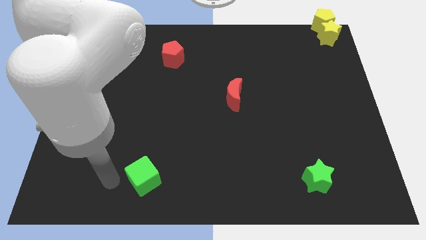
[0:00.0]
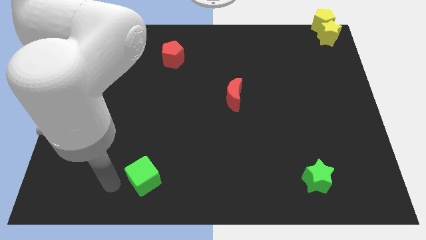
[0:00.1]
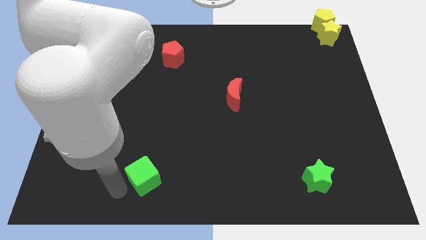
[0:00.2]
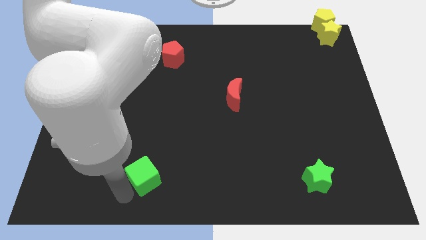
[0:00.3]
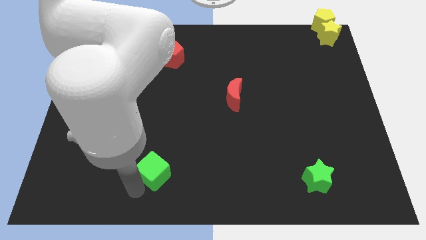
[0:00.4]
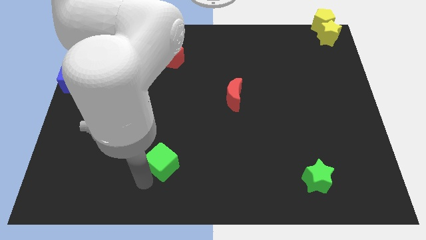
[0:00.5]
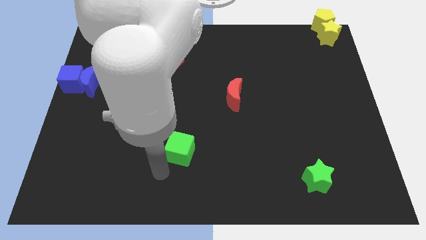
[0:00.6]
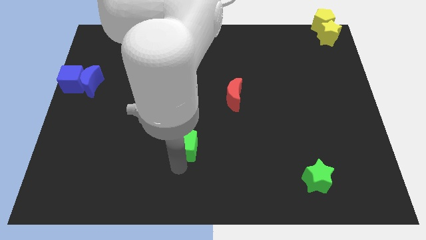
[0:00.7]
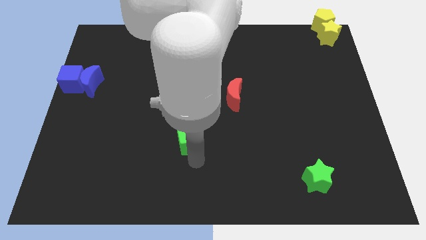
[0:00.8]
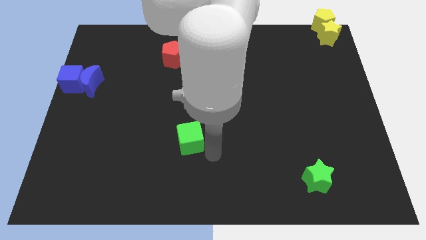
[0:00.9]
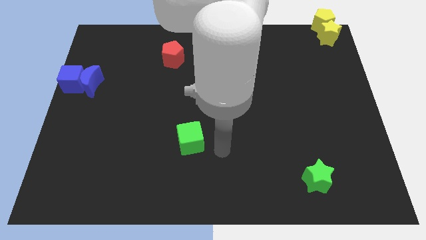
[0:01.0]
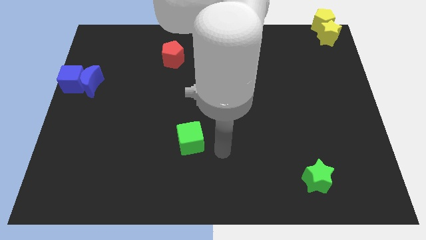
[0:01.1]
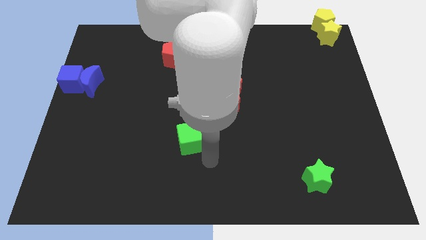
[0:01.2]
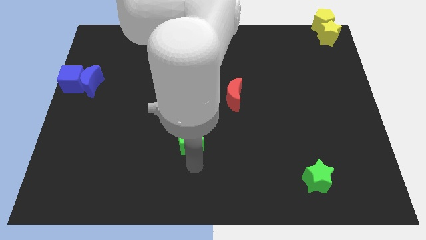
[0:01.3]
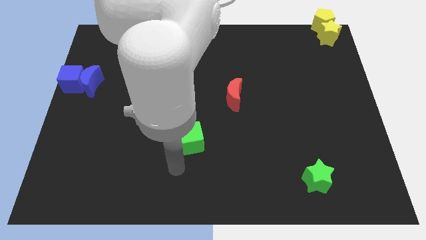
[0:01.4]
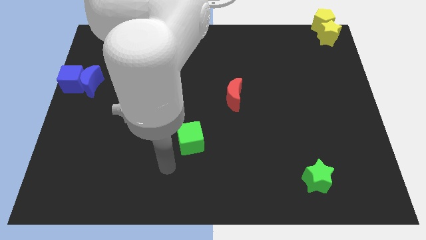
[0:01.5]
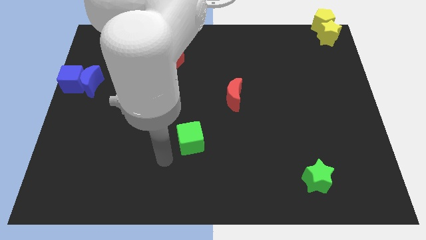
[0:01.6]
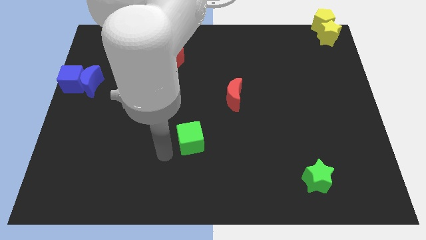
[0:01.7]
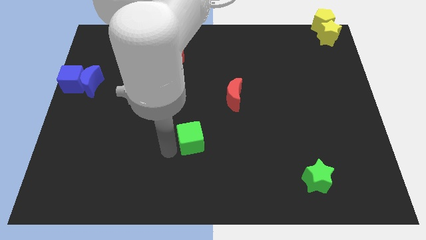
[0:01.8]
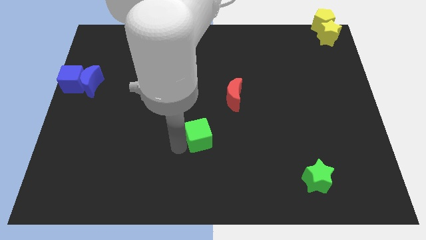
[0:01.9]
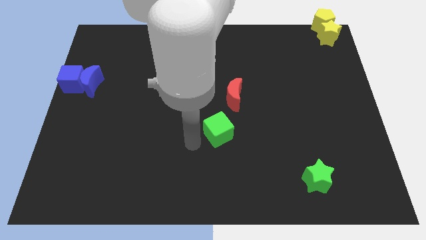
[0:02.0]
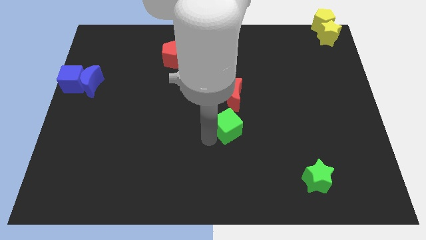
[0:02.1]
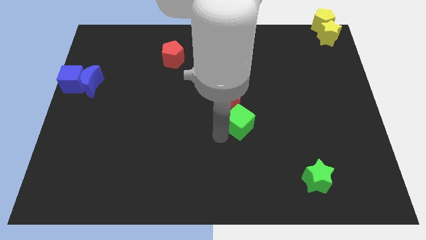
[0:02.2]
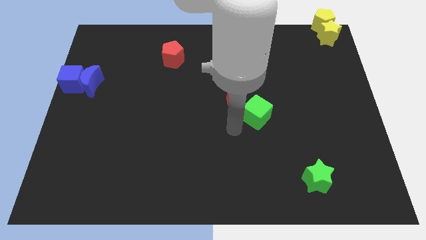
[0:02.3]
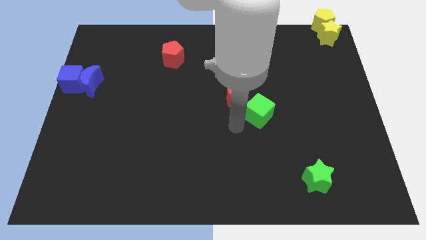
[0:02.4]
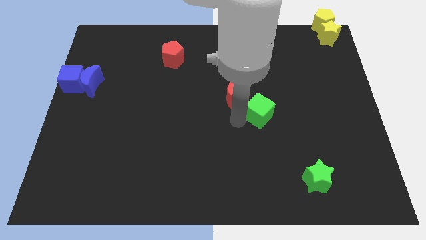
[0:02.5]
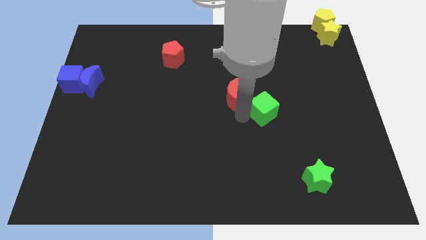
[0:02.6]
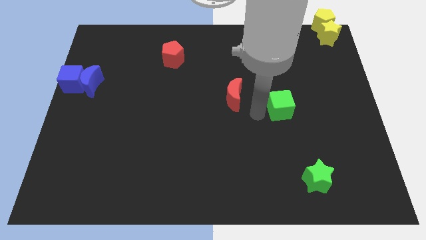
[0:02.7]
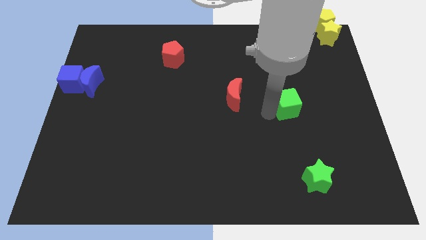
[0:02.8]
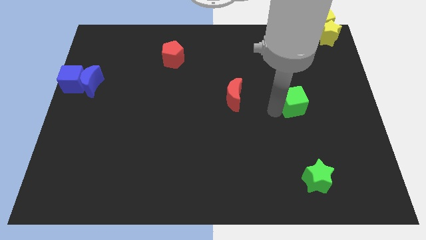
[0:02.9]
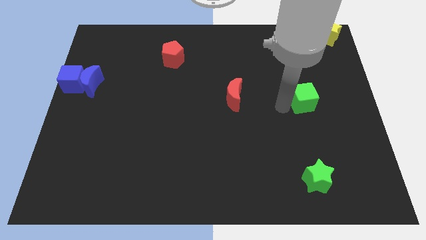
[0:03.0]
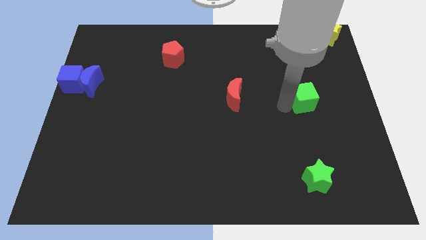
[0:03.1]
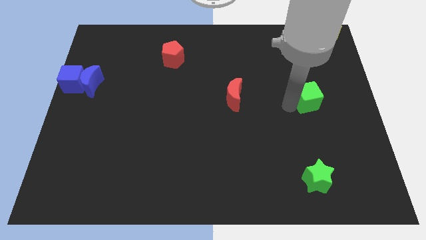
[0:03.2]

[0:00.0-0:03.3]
place the green cube to the right of the red moon

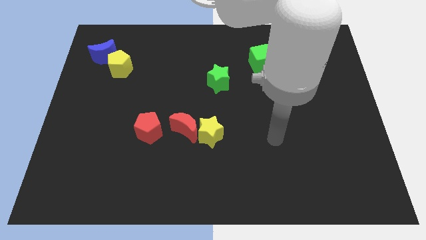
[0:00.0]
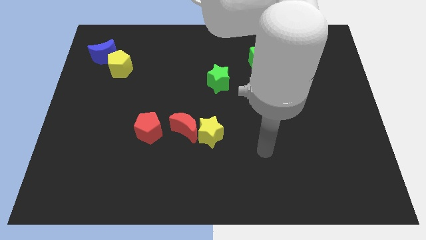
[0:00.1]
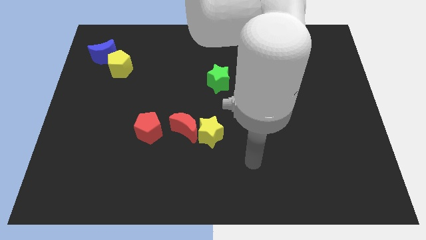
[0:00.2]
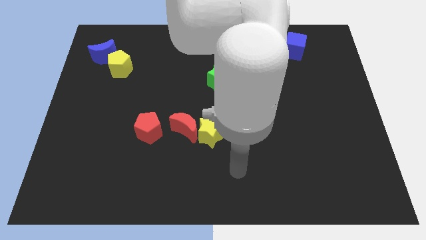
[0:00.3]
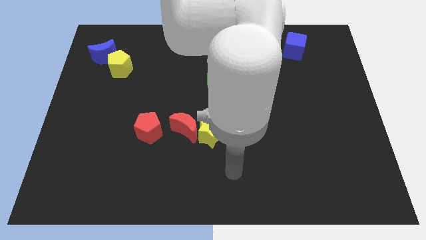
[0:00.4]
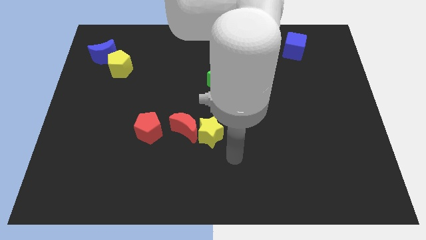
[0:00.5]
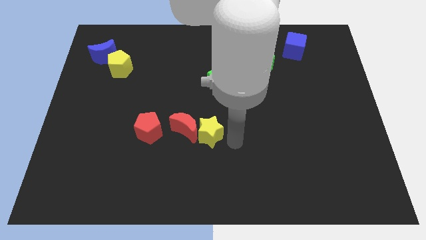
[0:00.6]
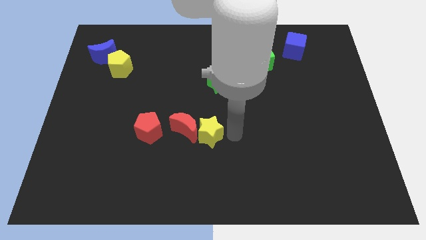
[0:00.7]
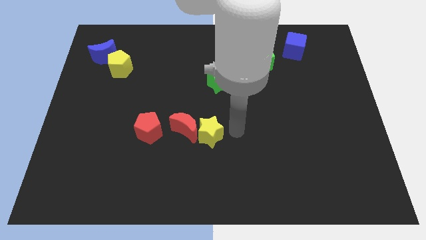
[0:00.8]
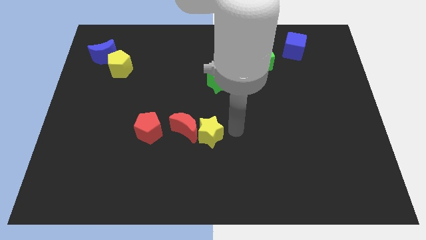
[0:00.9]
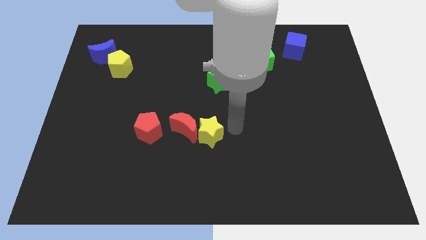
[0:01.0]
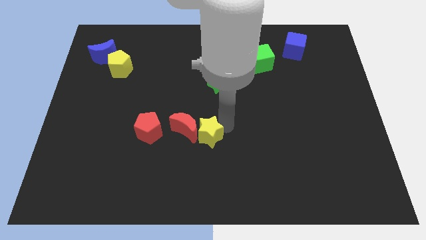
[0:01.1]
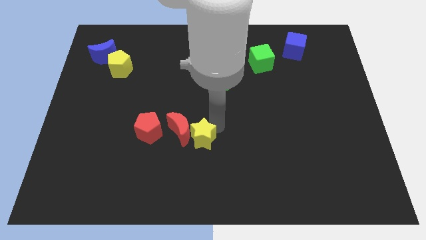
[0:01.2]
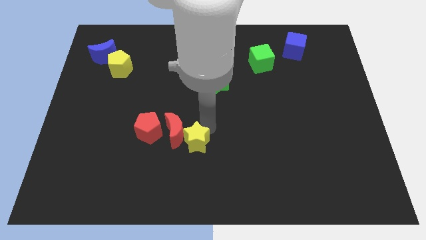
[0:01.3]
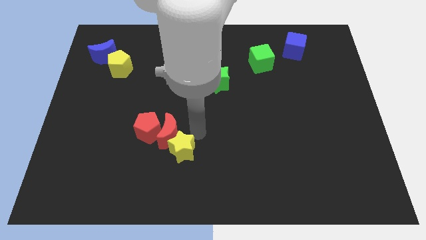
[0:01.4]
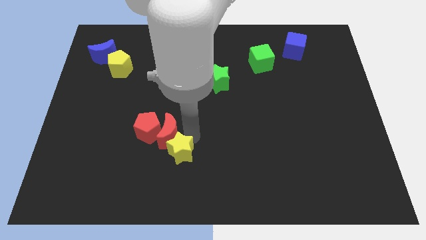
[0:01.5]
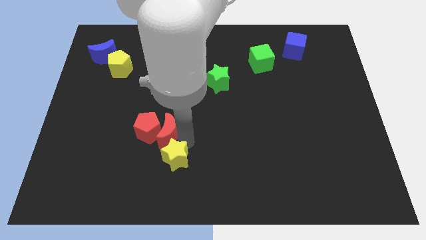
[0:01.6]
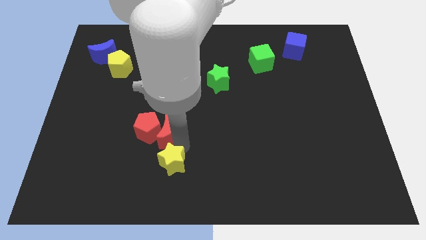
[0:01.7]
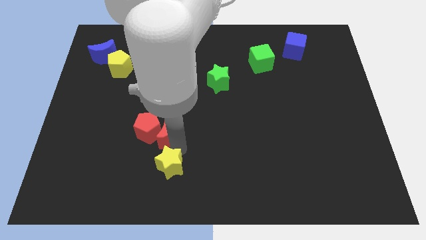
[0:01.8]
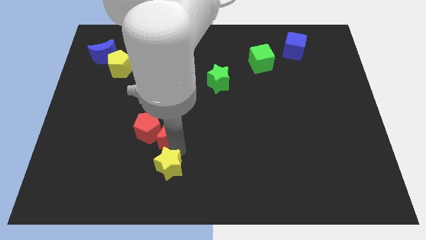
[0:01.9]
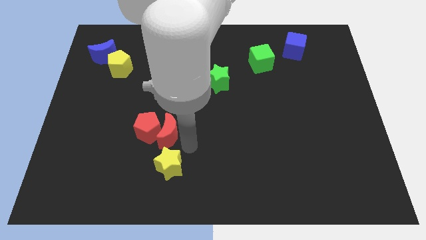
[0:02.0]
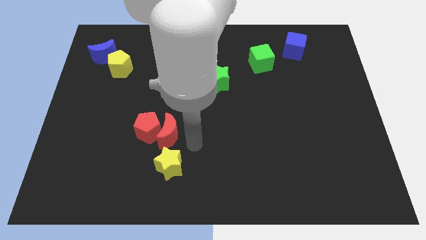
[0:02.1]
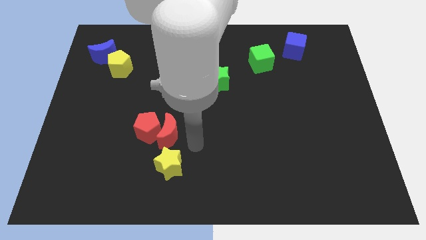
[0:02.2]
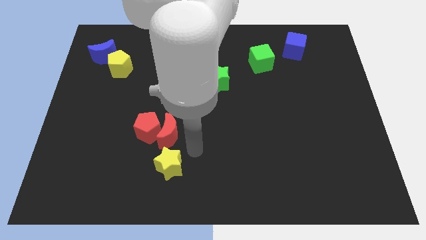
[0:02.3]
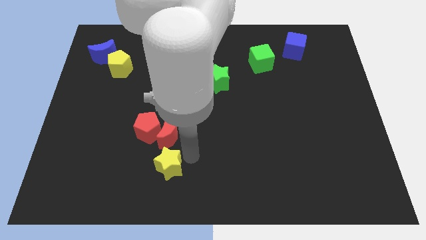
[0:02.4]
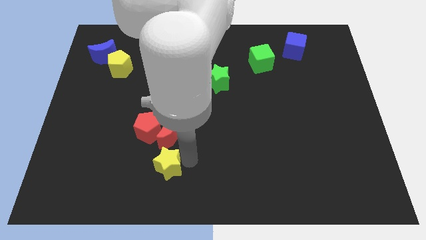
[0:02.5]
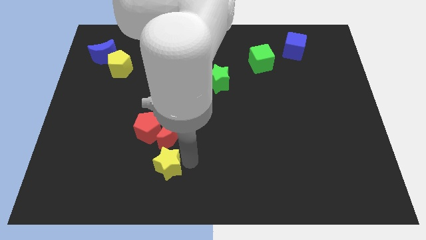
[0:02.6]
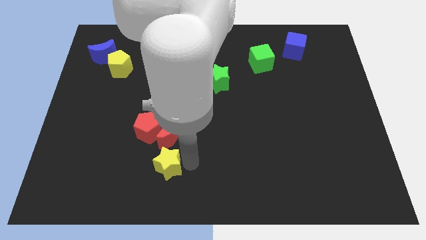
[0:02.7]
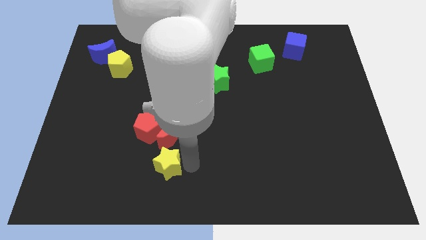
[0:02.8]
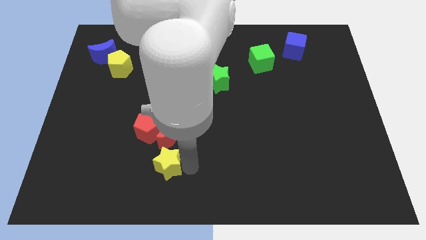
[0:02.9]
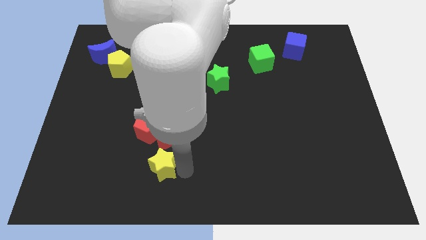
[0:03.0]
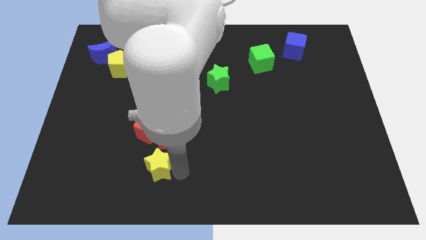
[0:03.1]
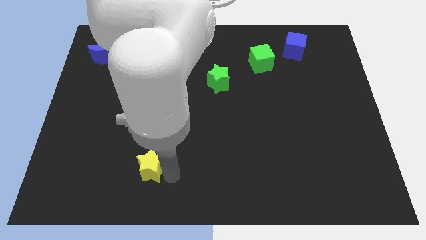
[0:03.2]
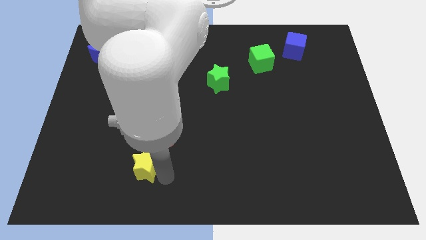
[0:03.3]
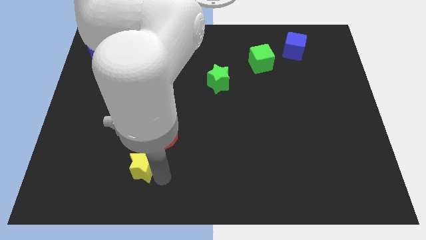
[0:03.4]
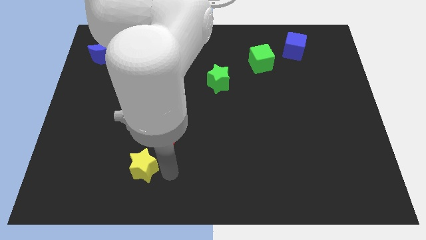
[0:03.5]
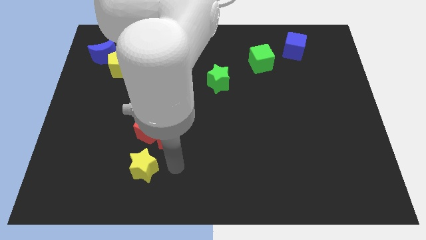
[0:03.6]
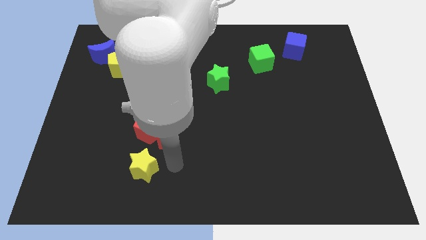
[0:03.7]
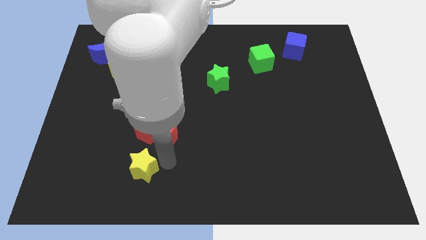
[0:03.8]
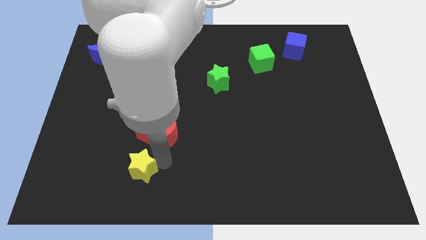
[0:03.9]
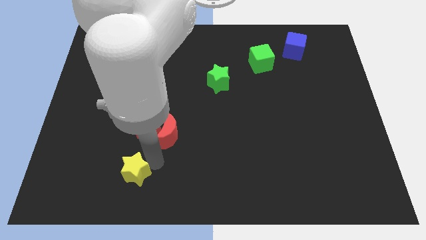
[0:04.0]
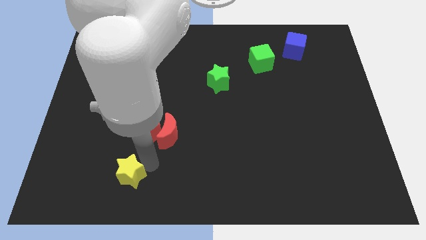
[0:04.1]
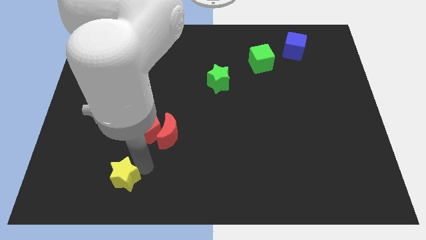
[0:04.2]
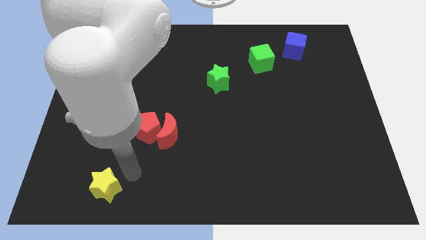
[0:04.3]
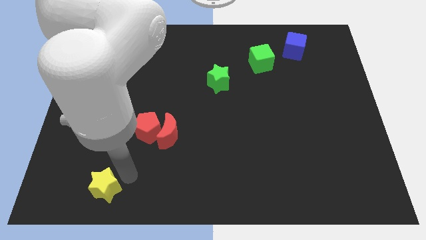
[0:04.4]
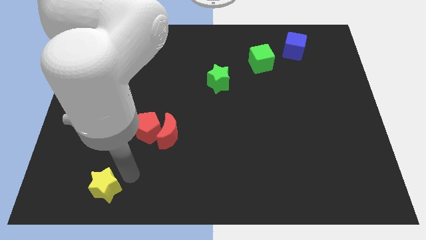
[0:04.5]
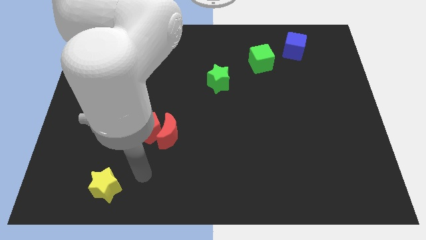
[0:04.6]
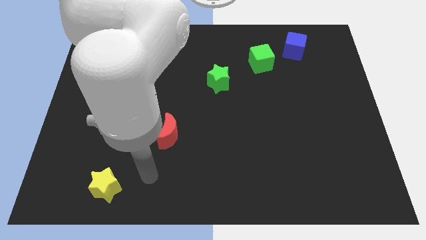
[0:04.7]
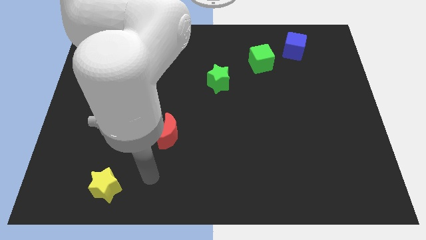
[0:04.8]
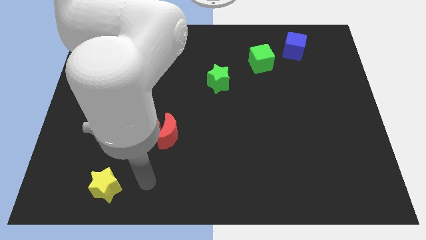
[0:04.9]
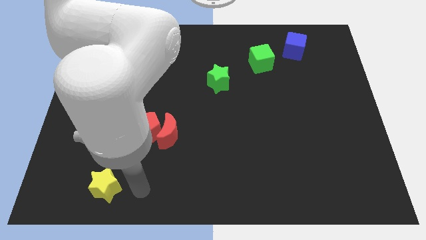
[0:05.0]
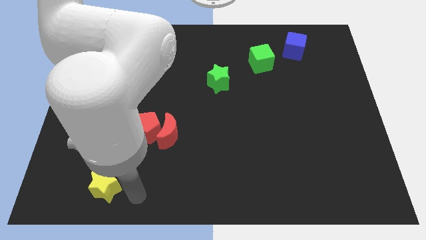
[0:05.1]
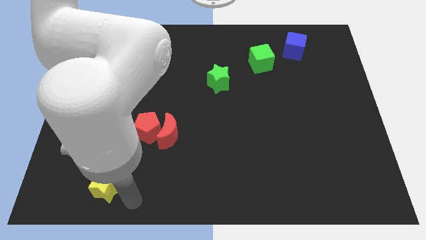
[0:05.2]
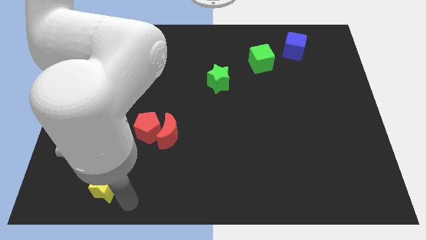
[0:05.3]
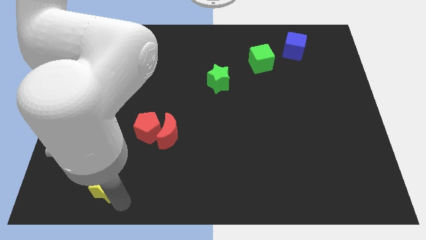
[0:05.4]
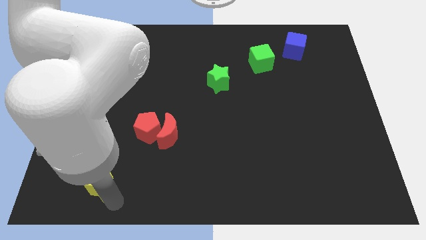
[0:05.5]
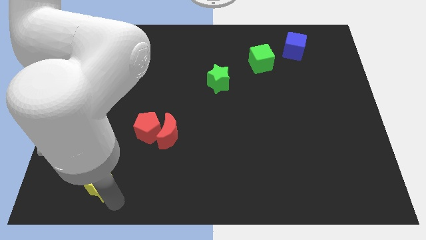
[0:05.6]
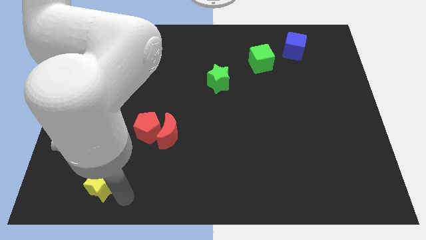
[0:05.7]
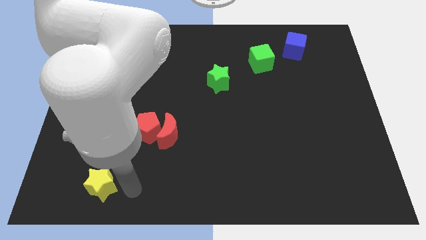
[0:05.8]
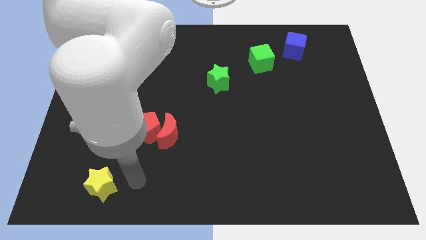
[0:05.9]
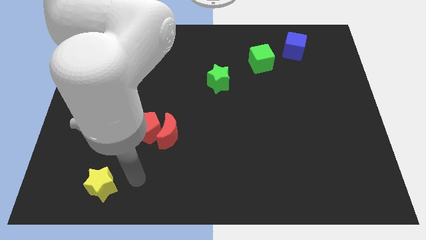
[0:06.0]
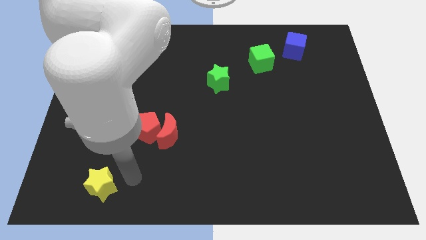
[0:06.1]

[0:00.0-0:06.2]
separate the yellow star from the red blocks
